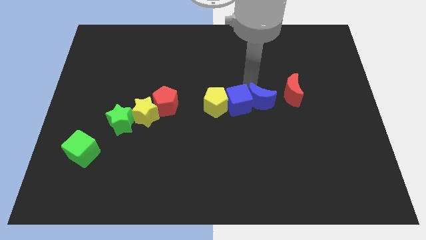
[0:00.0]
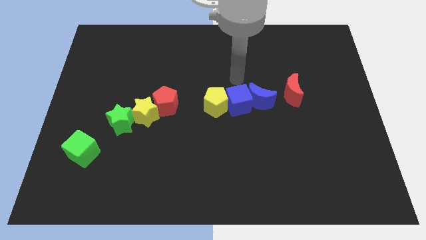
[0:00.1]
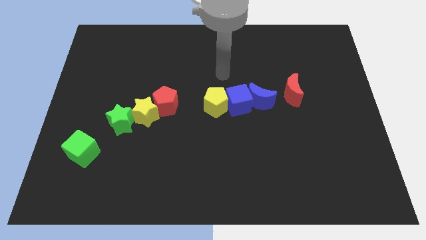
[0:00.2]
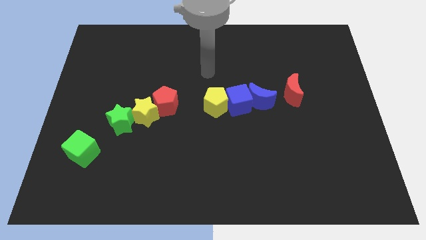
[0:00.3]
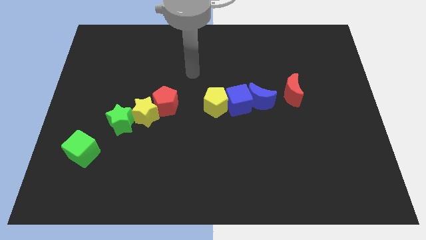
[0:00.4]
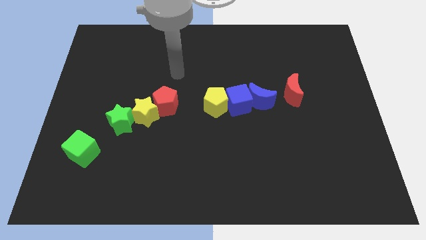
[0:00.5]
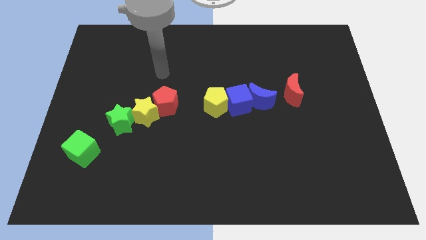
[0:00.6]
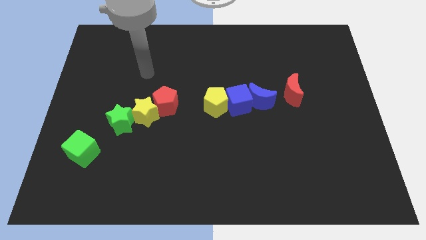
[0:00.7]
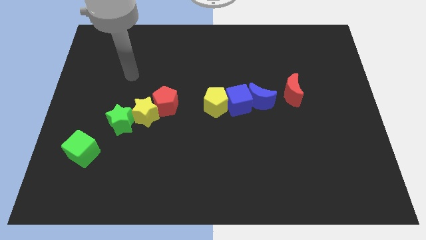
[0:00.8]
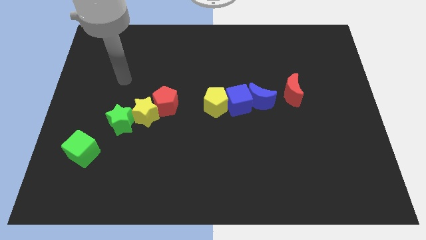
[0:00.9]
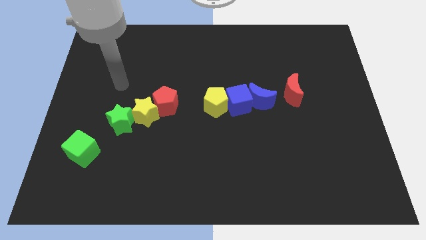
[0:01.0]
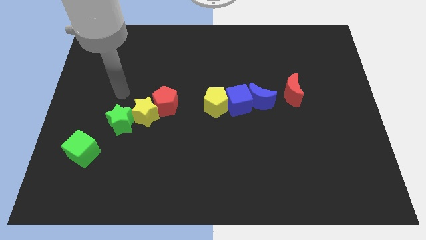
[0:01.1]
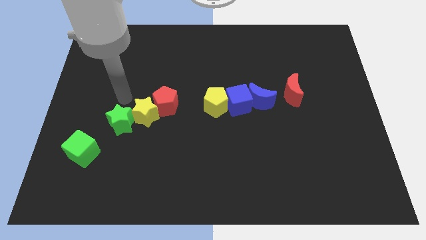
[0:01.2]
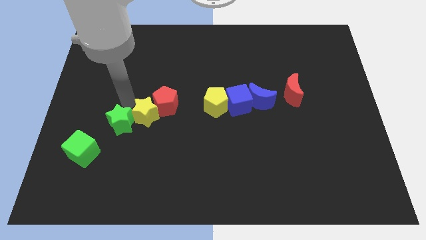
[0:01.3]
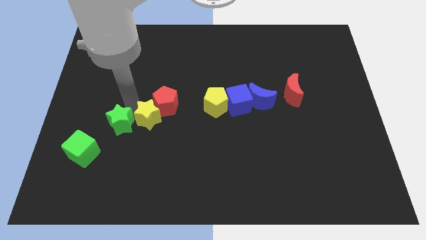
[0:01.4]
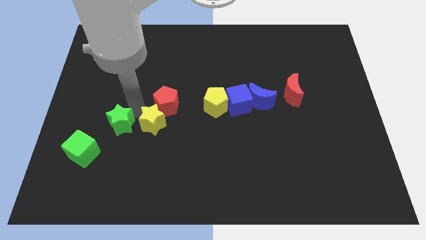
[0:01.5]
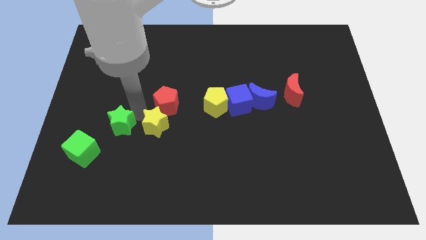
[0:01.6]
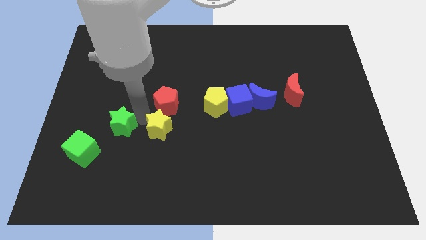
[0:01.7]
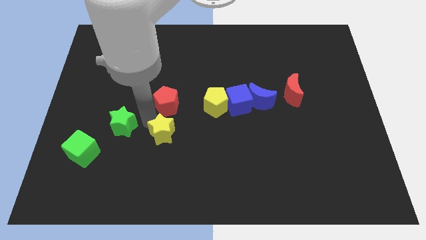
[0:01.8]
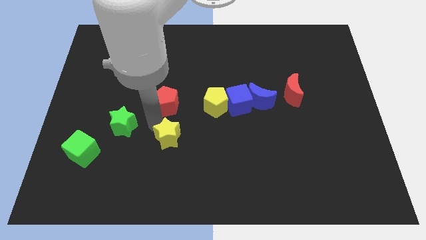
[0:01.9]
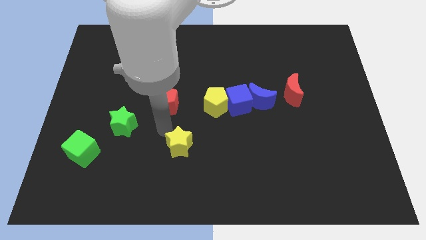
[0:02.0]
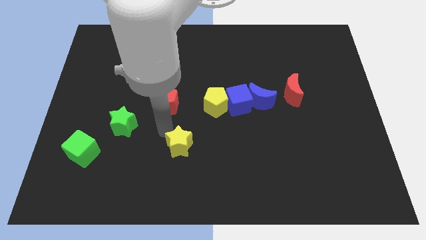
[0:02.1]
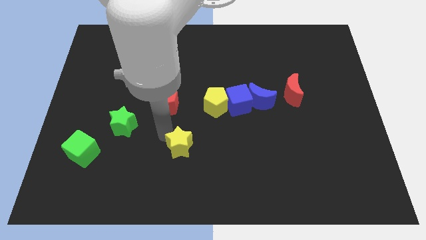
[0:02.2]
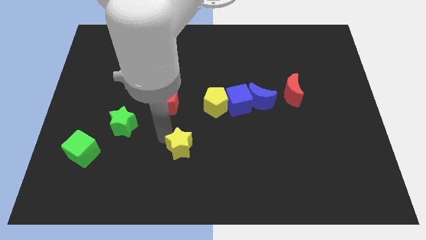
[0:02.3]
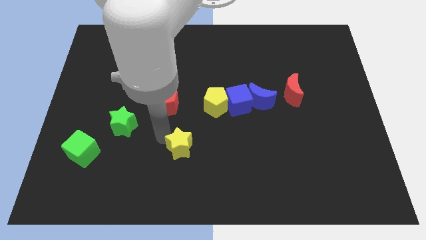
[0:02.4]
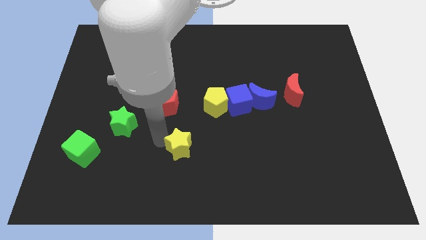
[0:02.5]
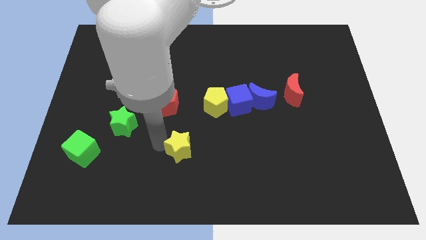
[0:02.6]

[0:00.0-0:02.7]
separate the yellow star from the green star and the red pentagon

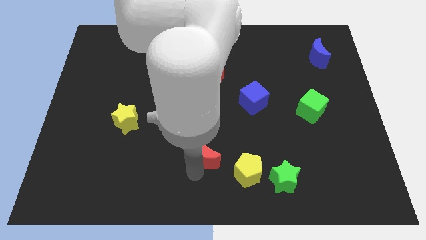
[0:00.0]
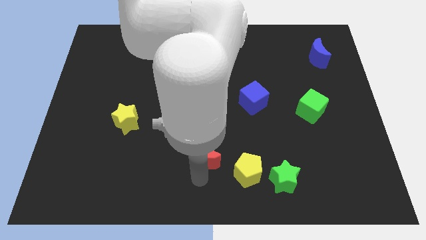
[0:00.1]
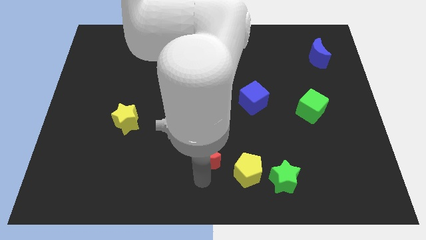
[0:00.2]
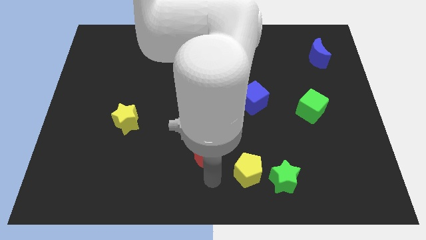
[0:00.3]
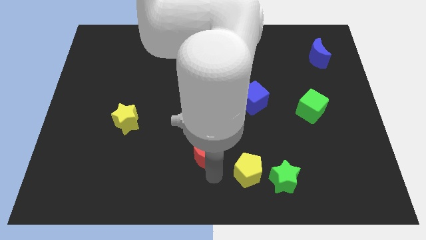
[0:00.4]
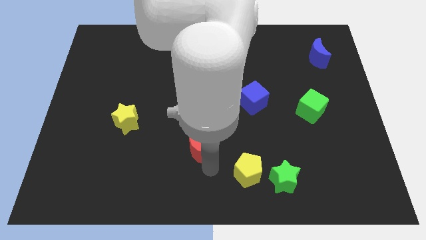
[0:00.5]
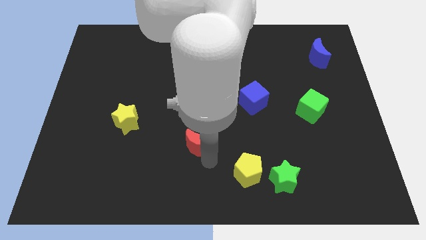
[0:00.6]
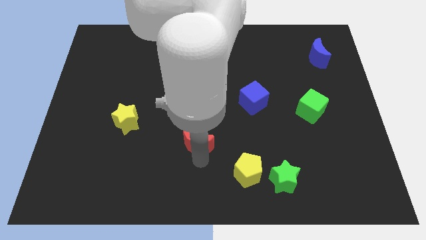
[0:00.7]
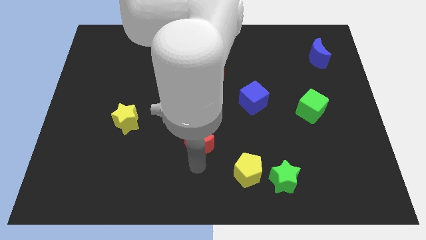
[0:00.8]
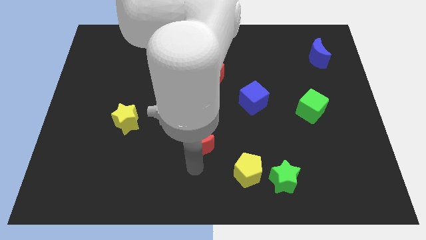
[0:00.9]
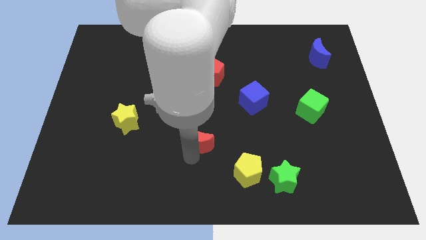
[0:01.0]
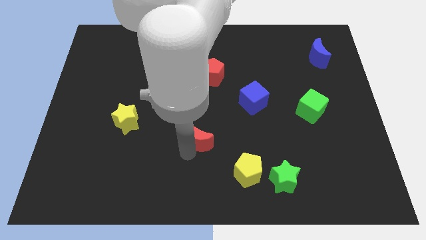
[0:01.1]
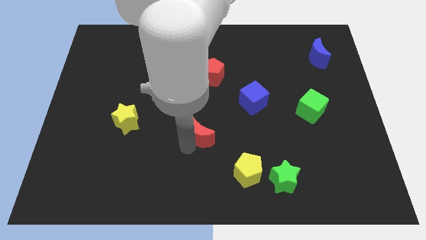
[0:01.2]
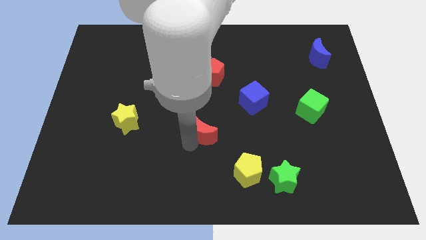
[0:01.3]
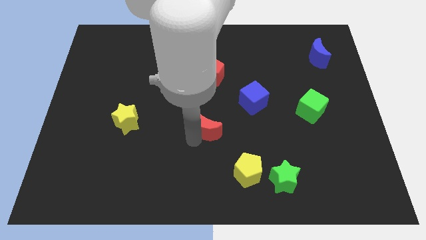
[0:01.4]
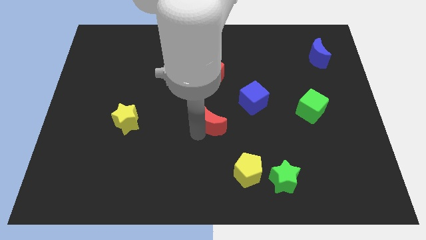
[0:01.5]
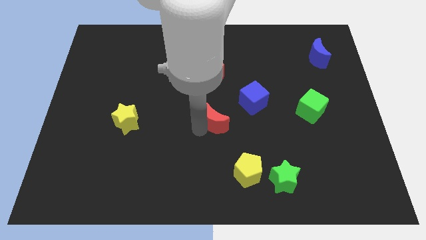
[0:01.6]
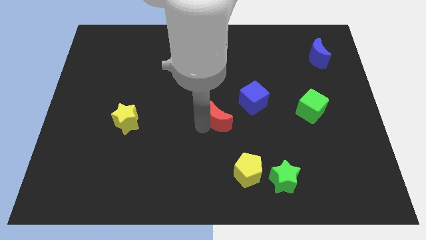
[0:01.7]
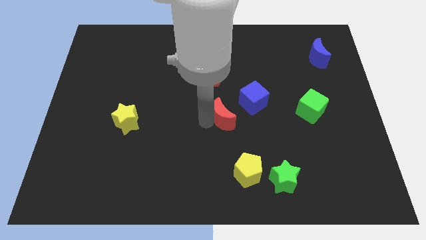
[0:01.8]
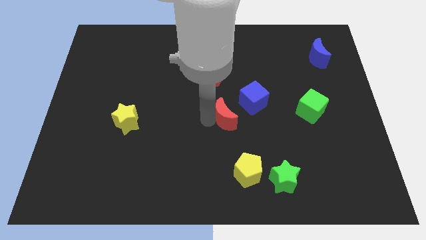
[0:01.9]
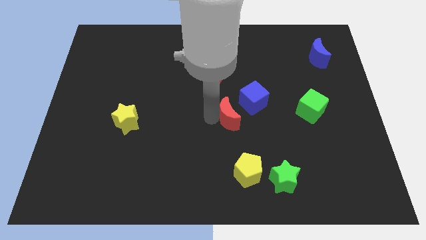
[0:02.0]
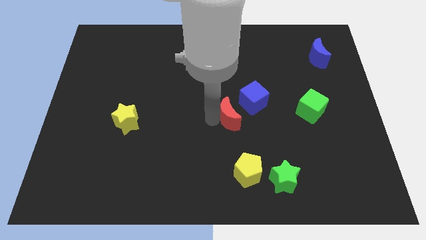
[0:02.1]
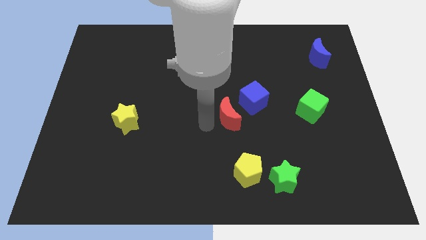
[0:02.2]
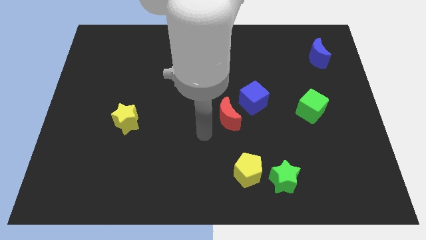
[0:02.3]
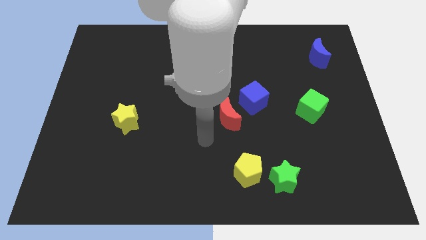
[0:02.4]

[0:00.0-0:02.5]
place the red crescent to the right of the yellow star

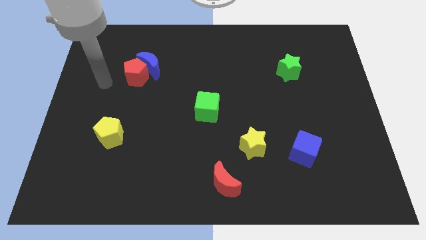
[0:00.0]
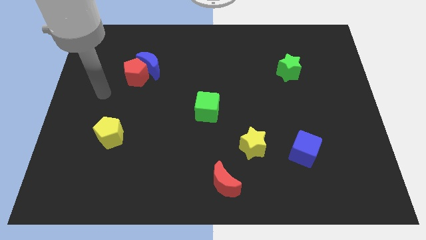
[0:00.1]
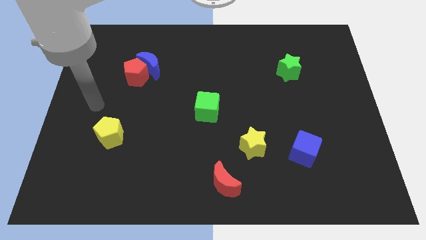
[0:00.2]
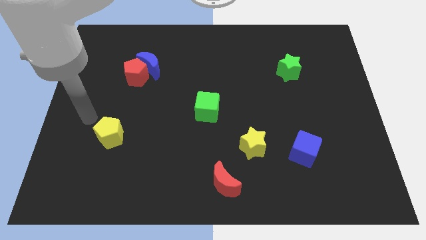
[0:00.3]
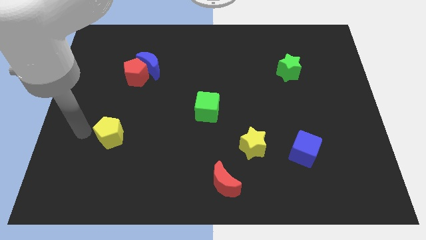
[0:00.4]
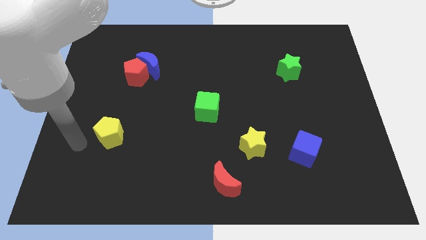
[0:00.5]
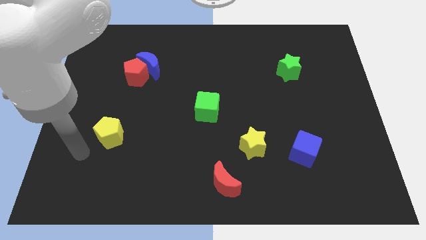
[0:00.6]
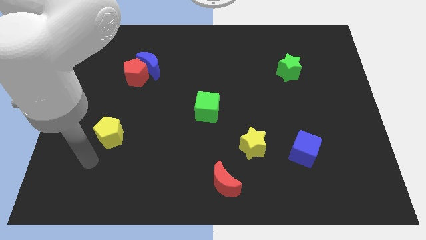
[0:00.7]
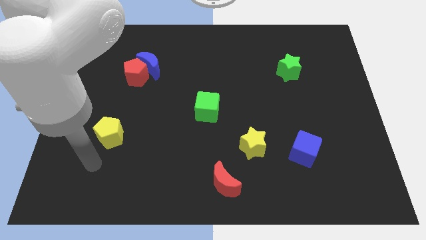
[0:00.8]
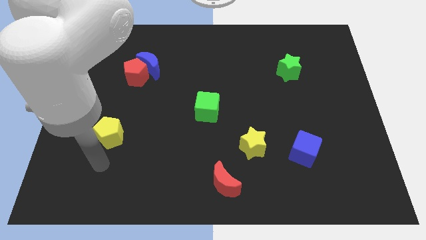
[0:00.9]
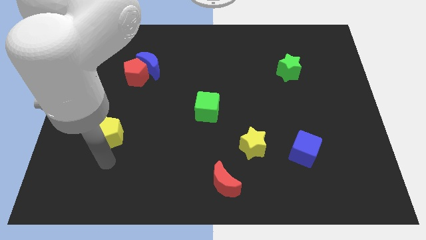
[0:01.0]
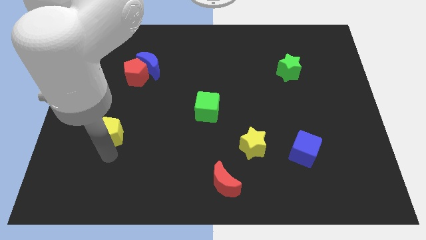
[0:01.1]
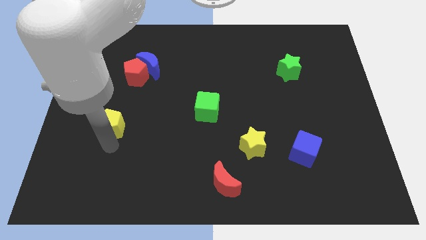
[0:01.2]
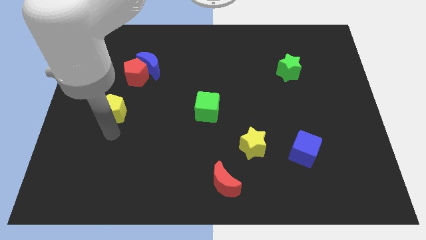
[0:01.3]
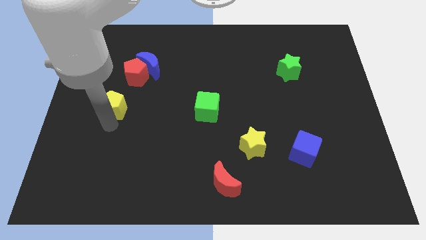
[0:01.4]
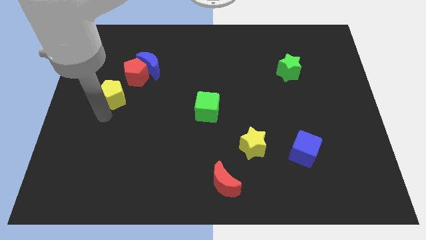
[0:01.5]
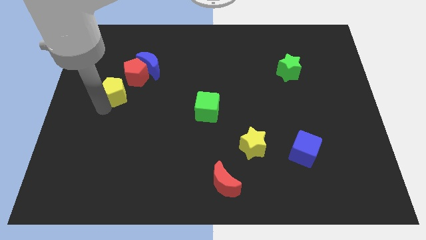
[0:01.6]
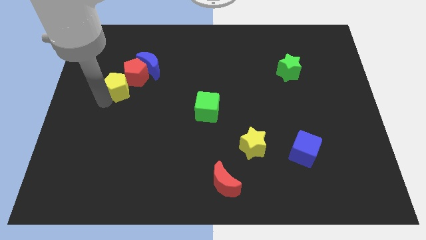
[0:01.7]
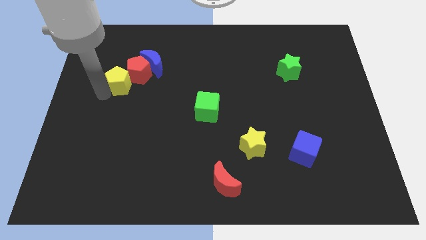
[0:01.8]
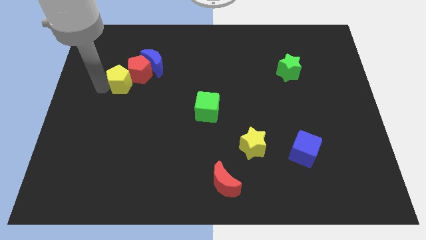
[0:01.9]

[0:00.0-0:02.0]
push yellow pentagon into the red pentagon

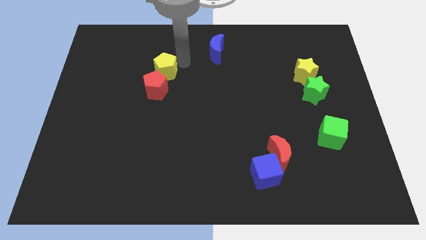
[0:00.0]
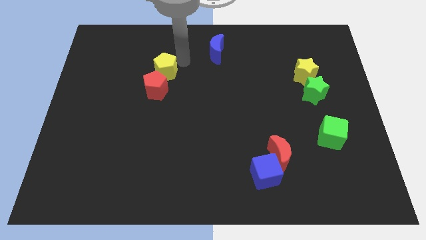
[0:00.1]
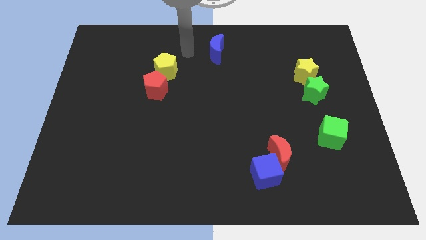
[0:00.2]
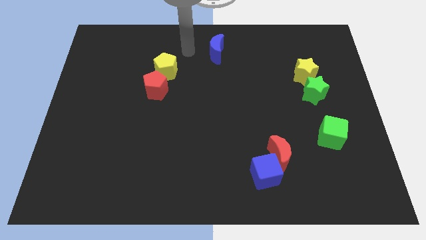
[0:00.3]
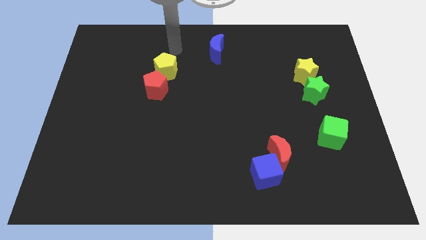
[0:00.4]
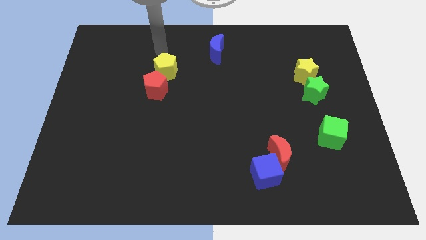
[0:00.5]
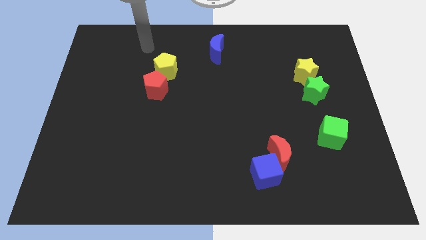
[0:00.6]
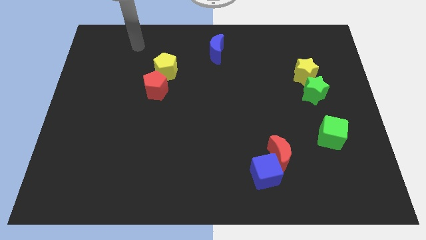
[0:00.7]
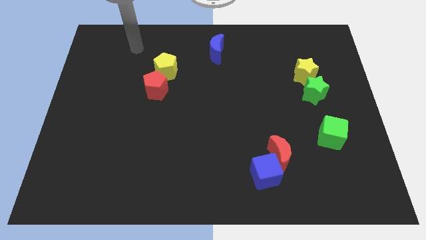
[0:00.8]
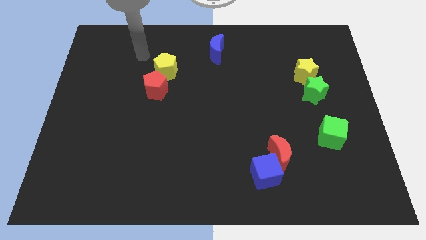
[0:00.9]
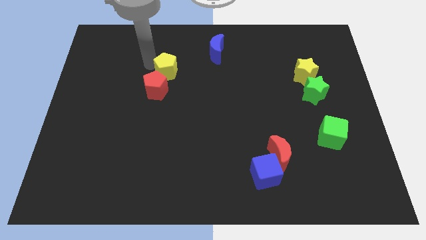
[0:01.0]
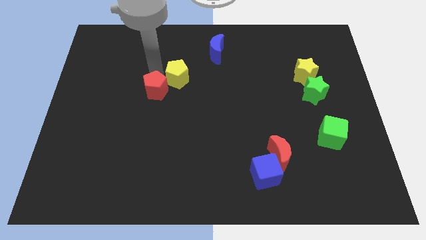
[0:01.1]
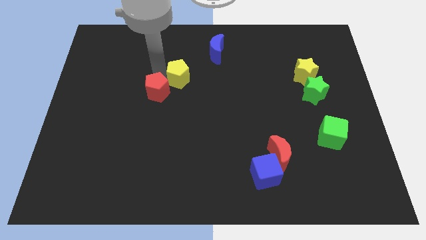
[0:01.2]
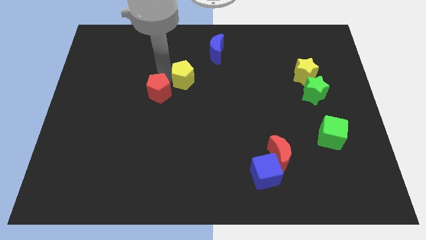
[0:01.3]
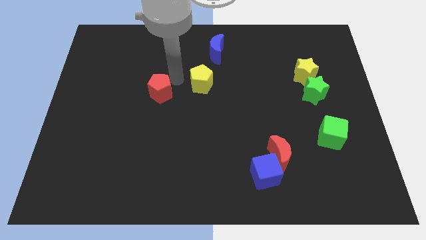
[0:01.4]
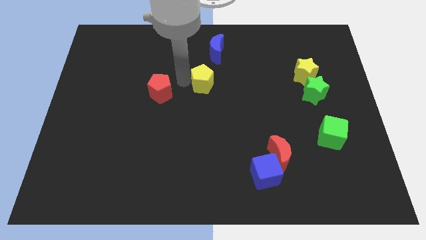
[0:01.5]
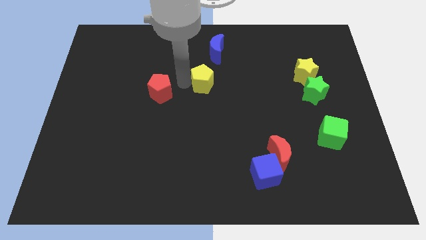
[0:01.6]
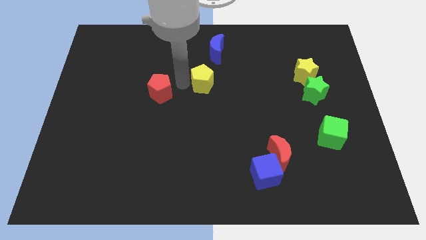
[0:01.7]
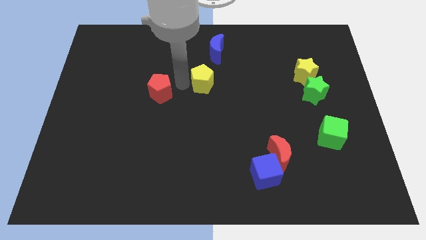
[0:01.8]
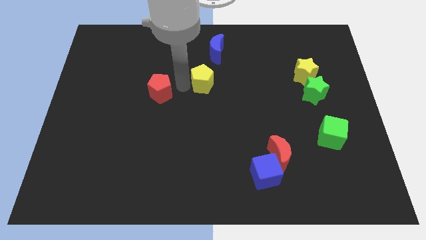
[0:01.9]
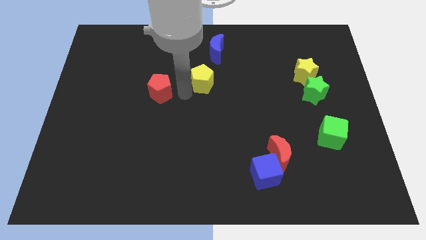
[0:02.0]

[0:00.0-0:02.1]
point your arm between red and yellow pentagon
